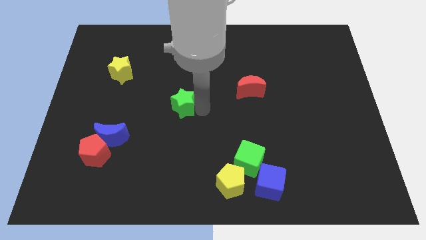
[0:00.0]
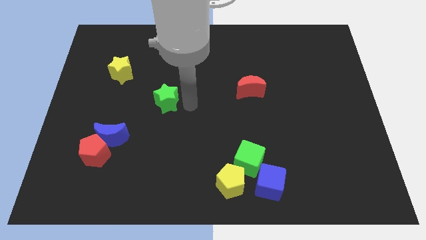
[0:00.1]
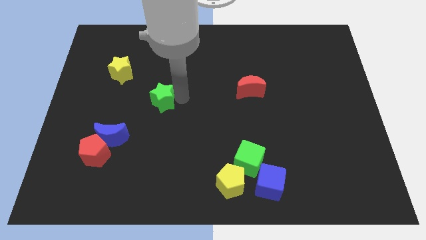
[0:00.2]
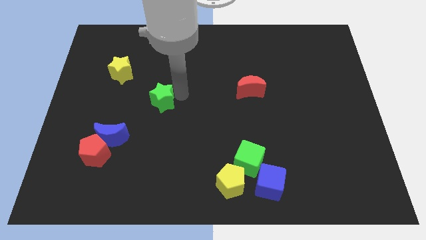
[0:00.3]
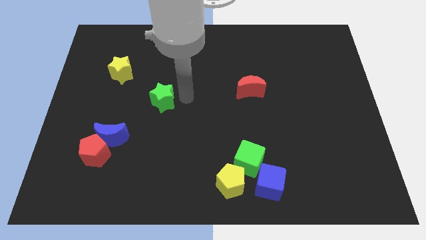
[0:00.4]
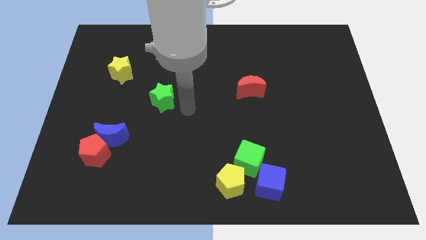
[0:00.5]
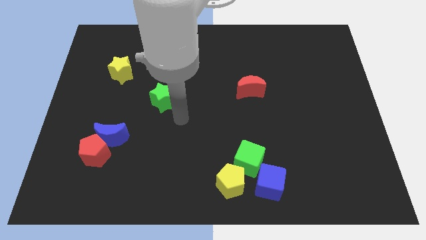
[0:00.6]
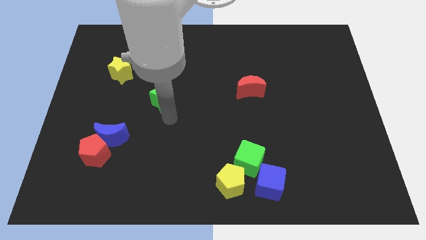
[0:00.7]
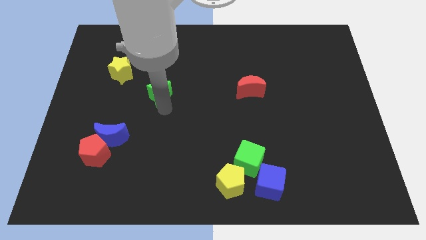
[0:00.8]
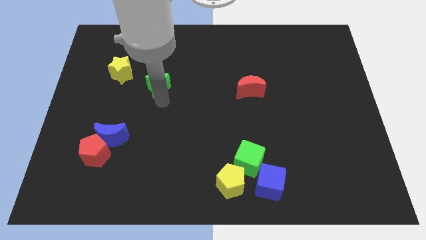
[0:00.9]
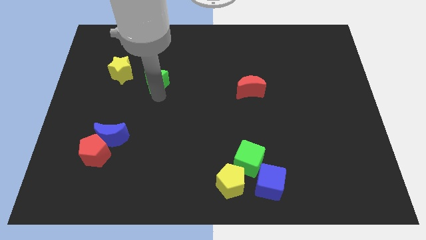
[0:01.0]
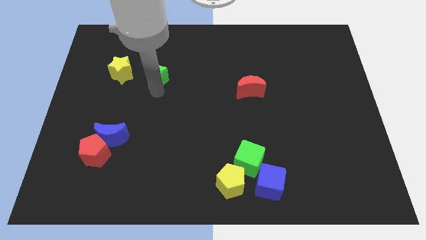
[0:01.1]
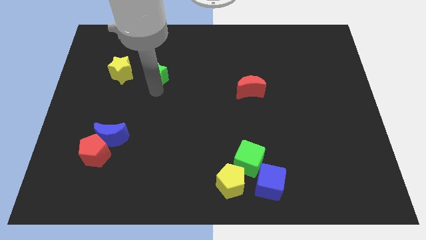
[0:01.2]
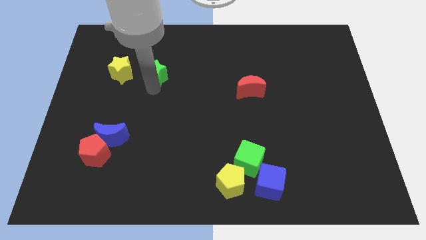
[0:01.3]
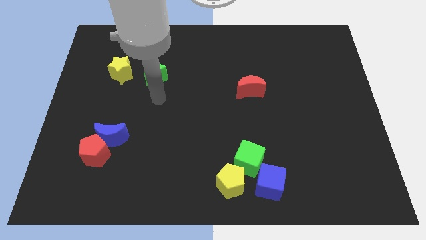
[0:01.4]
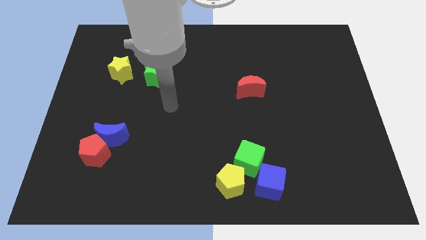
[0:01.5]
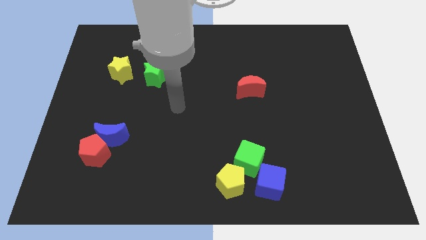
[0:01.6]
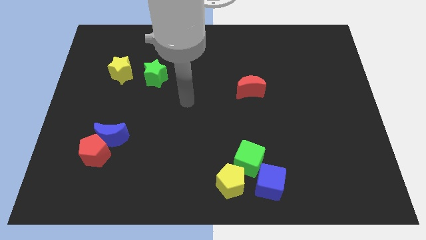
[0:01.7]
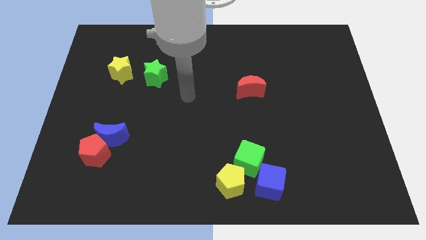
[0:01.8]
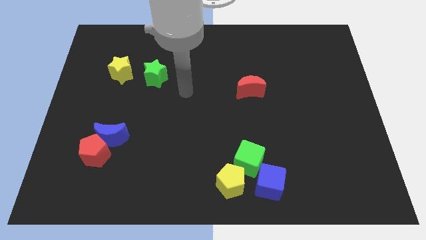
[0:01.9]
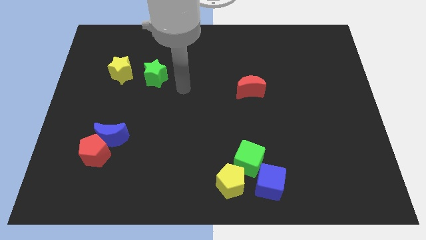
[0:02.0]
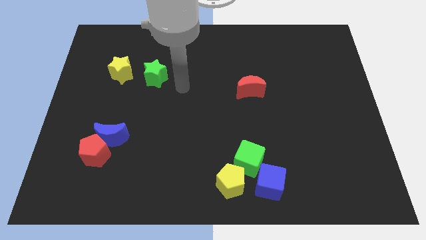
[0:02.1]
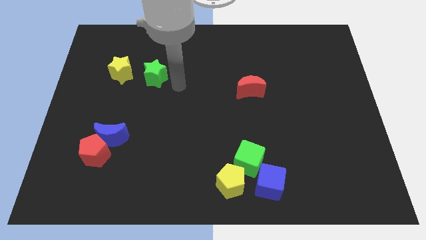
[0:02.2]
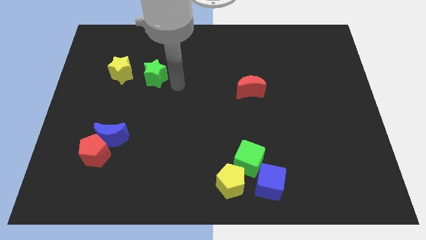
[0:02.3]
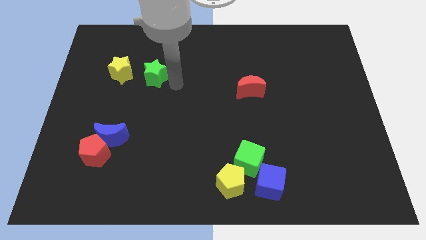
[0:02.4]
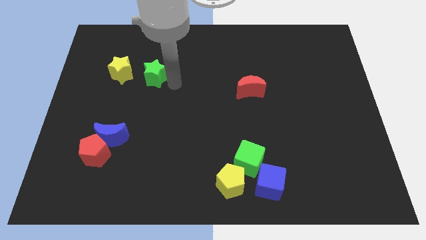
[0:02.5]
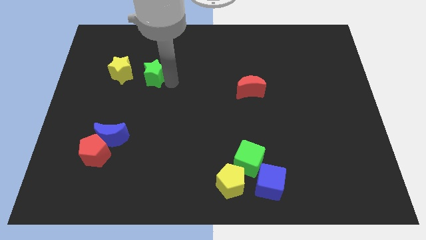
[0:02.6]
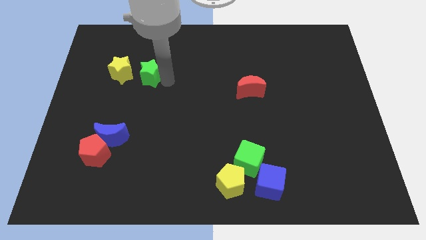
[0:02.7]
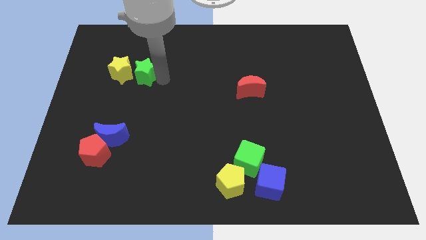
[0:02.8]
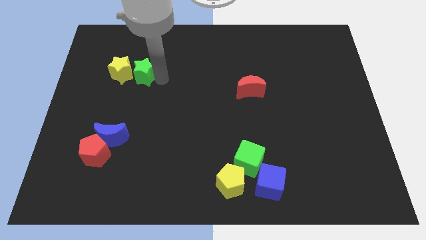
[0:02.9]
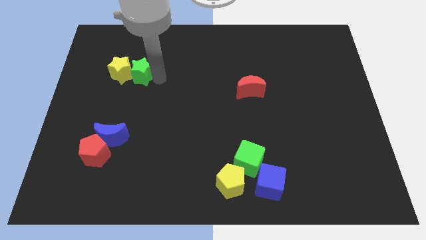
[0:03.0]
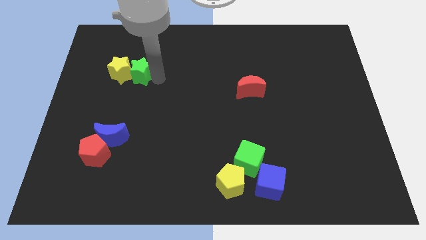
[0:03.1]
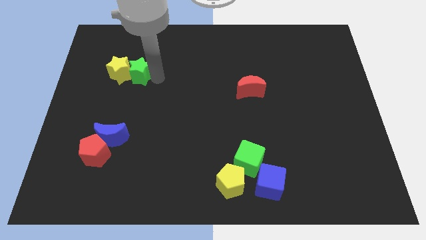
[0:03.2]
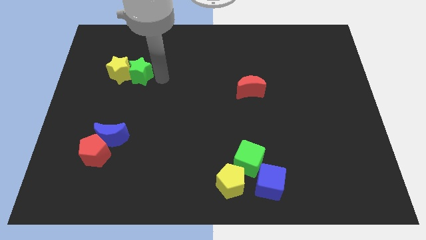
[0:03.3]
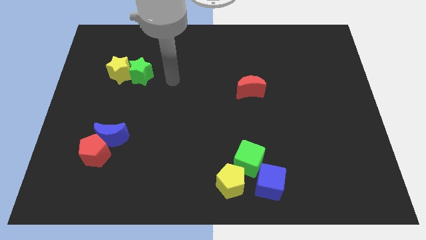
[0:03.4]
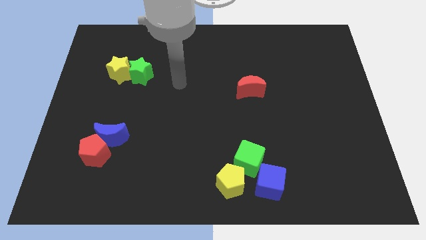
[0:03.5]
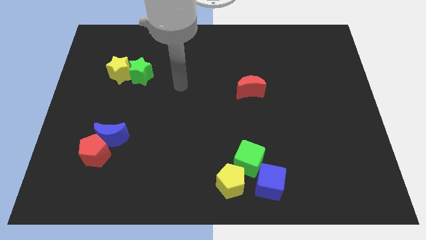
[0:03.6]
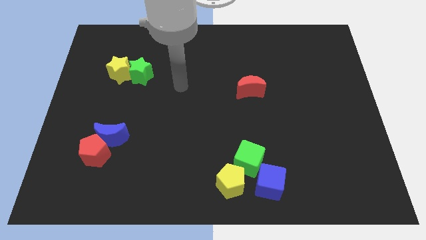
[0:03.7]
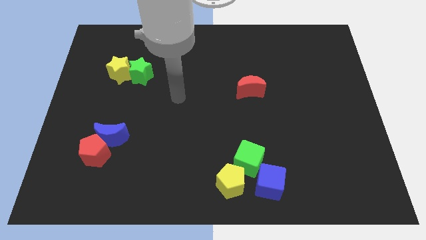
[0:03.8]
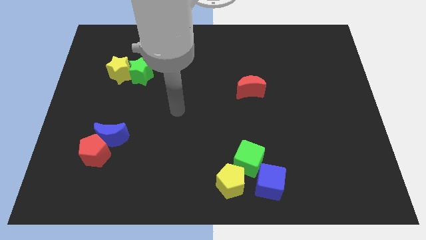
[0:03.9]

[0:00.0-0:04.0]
push the green star into the yellow star

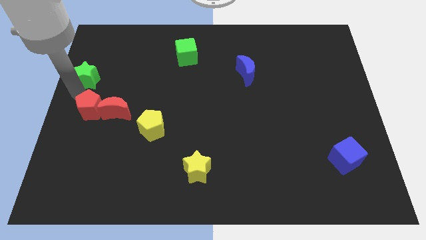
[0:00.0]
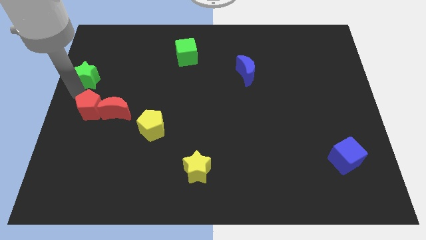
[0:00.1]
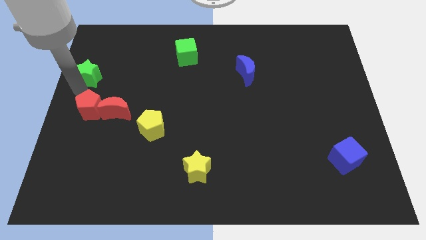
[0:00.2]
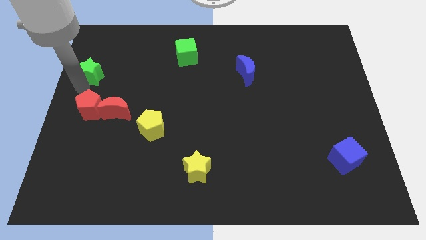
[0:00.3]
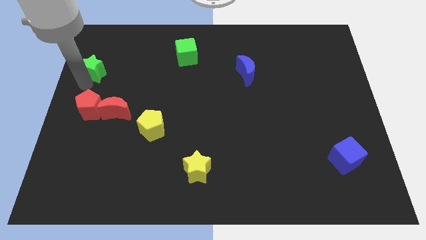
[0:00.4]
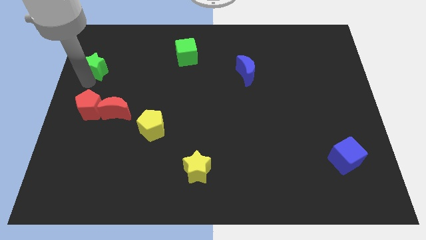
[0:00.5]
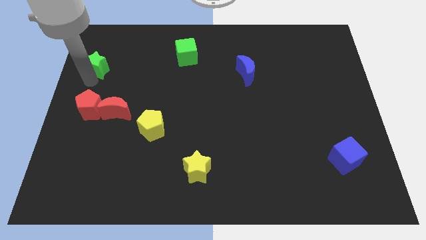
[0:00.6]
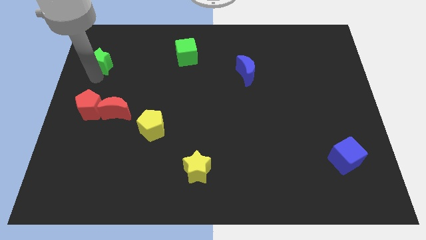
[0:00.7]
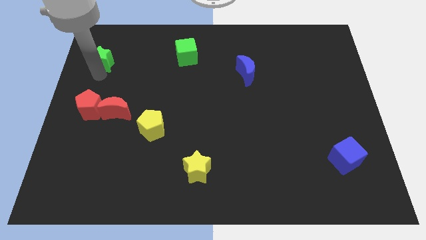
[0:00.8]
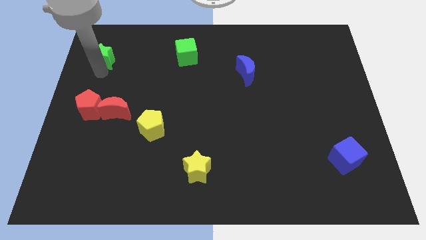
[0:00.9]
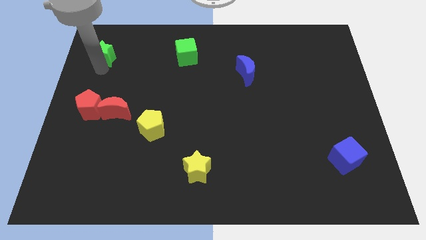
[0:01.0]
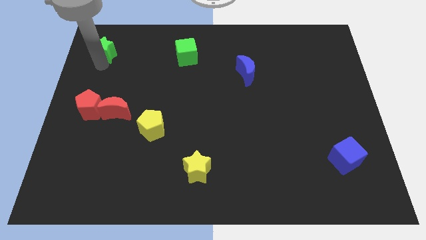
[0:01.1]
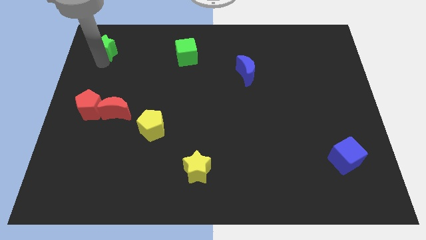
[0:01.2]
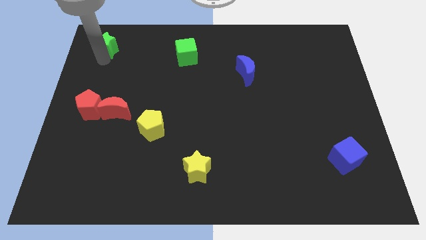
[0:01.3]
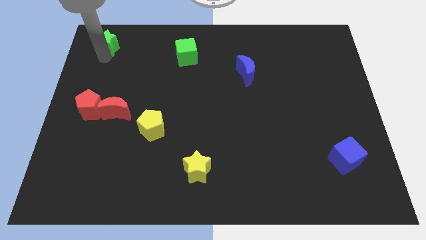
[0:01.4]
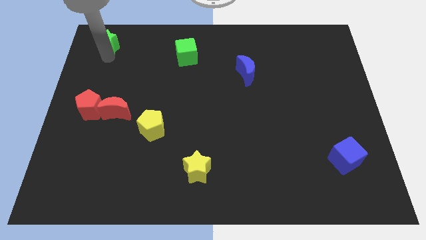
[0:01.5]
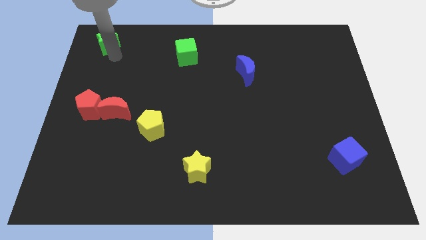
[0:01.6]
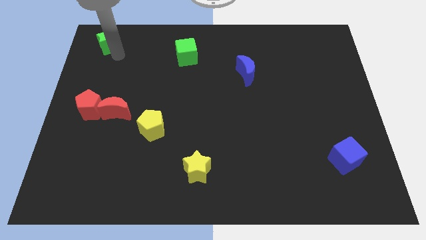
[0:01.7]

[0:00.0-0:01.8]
move the green star towards up

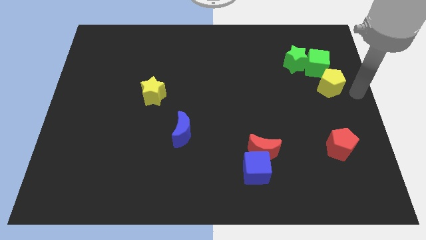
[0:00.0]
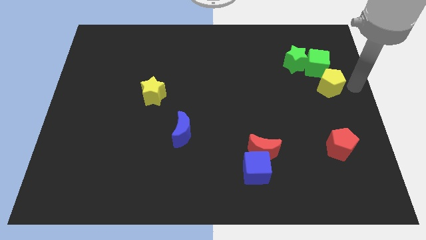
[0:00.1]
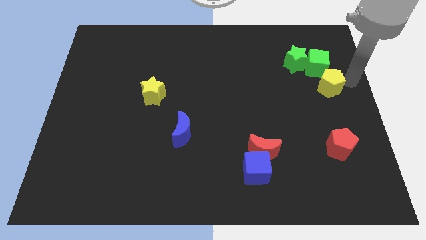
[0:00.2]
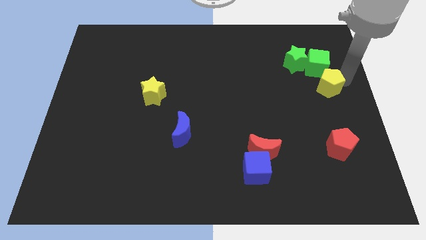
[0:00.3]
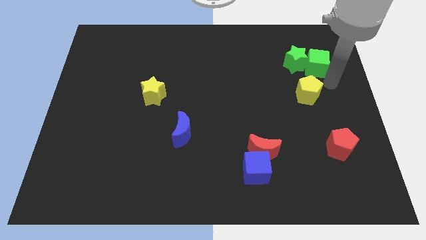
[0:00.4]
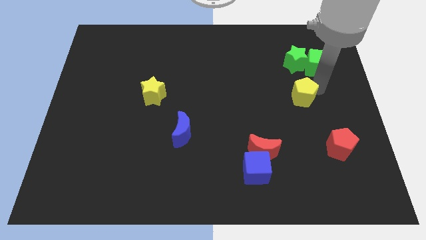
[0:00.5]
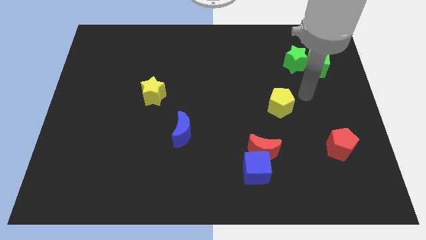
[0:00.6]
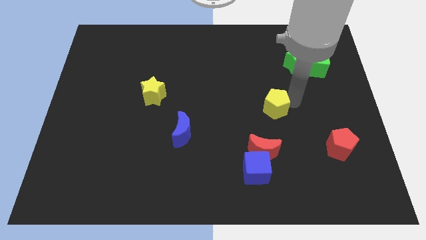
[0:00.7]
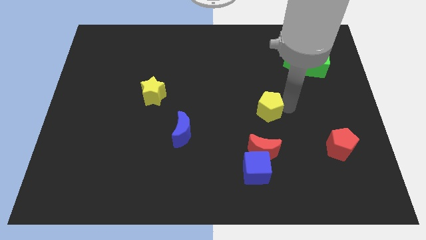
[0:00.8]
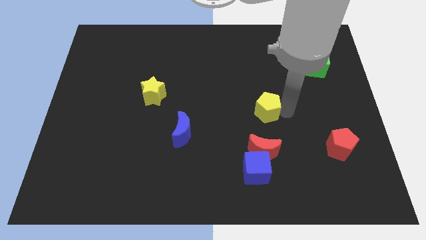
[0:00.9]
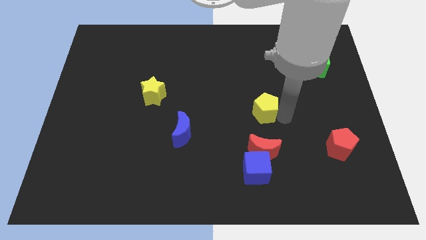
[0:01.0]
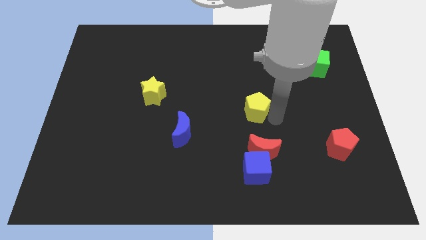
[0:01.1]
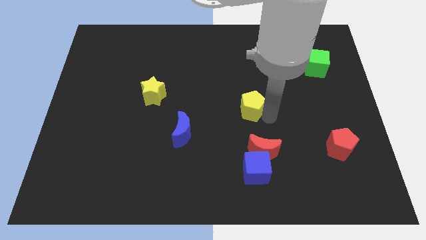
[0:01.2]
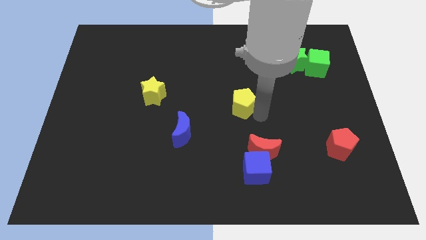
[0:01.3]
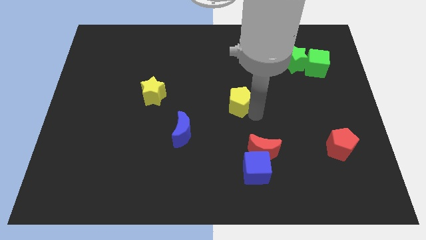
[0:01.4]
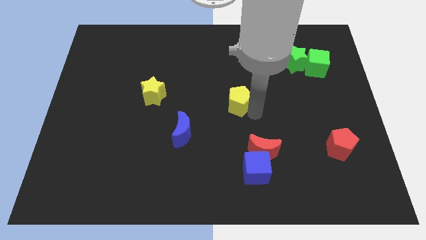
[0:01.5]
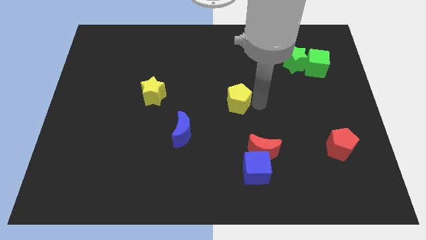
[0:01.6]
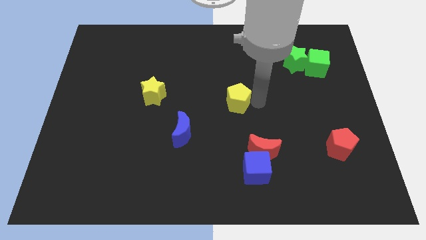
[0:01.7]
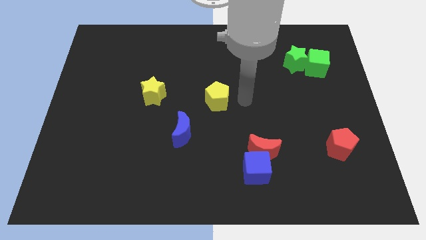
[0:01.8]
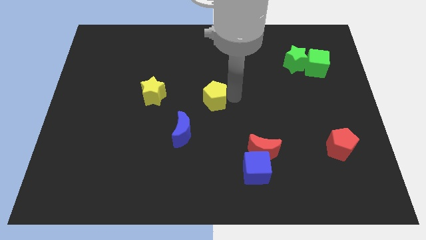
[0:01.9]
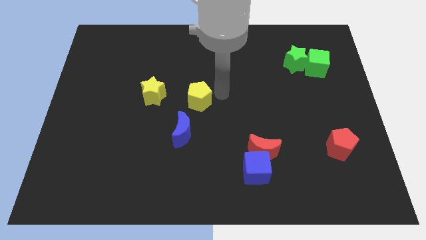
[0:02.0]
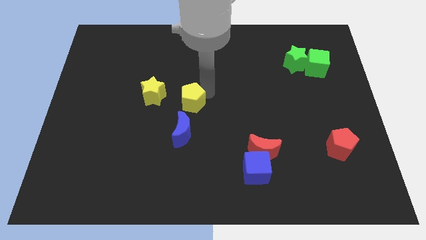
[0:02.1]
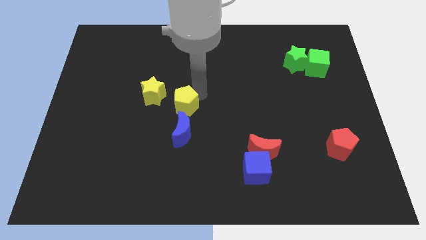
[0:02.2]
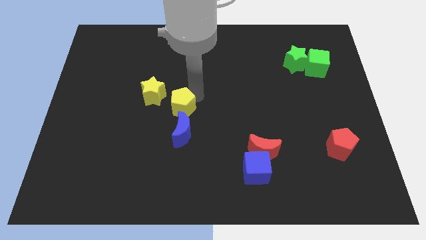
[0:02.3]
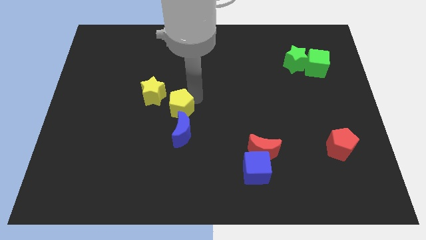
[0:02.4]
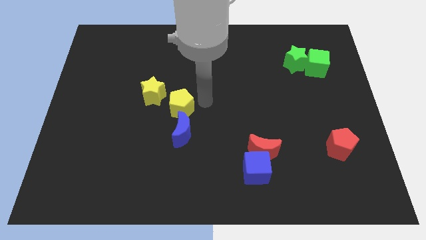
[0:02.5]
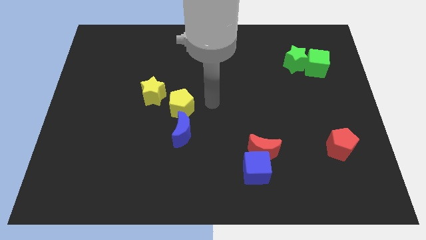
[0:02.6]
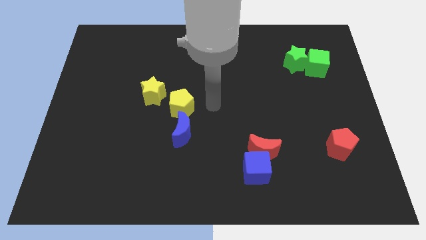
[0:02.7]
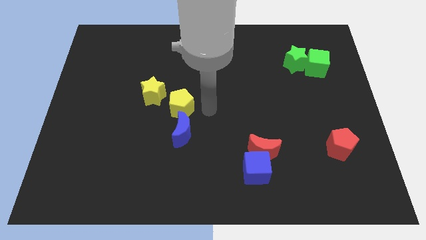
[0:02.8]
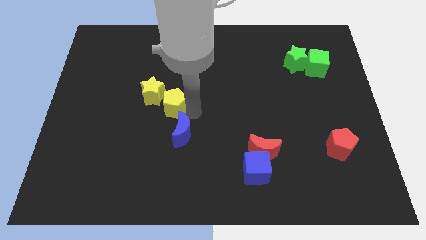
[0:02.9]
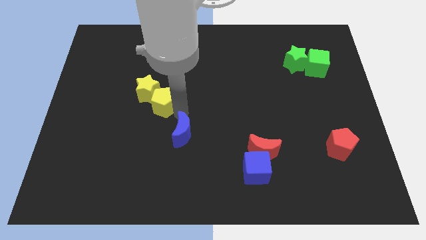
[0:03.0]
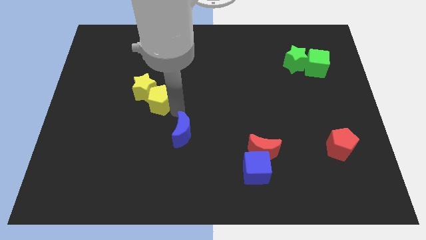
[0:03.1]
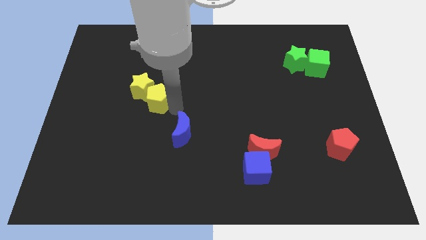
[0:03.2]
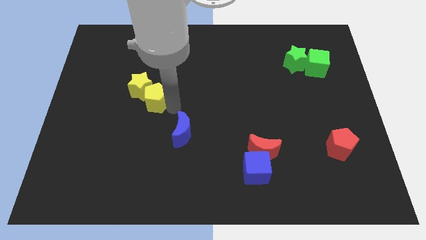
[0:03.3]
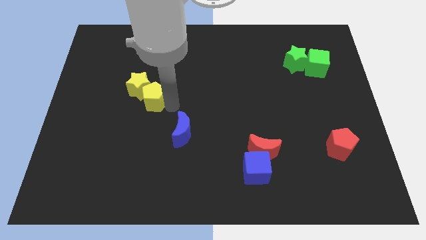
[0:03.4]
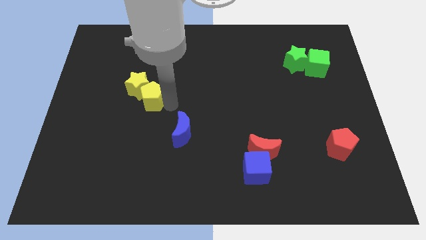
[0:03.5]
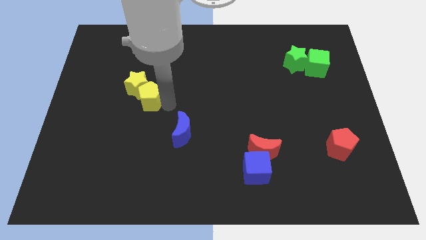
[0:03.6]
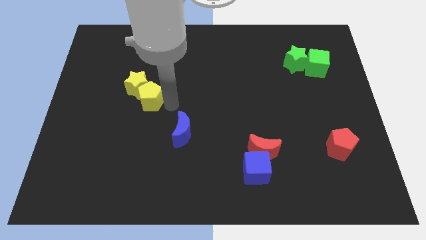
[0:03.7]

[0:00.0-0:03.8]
move the yellow pentagon into the yllow star
